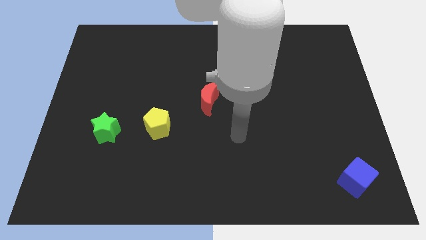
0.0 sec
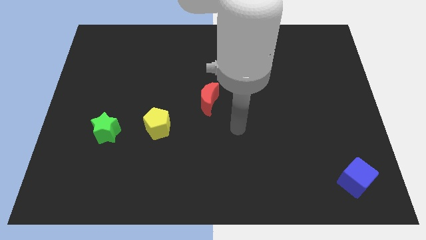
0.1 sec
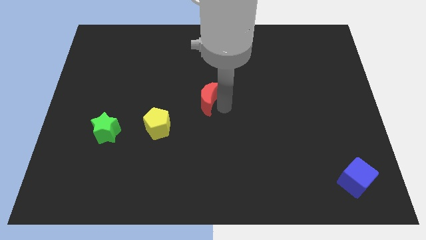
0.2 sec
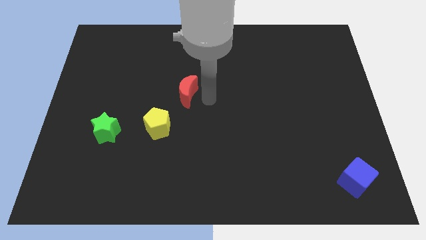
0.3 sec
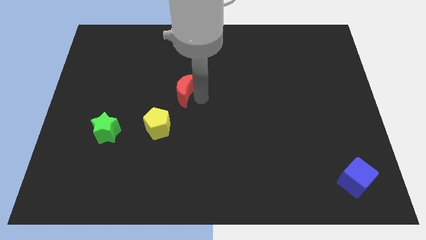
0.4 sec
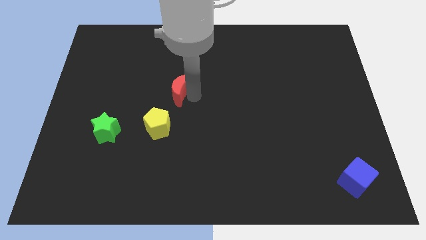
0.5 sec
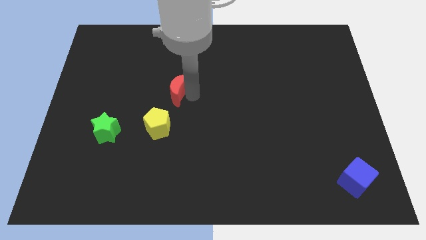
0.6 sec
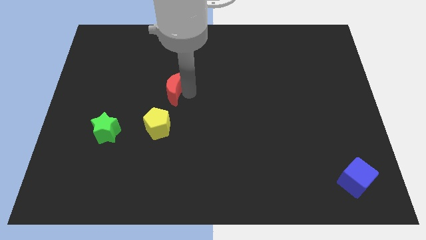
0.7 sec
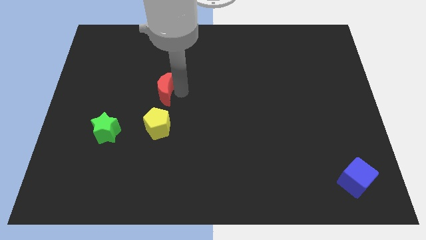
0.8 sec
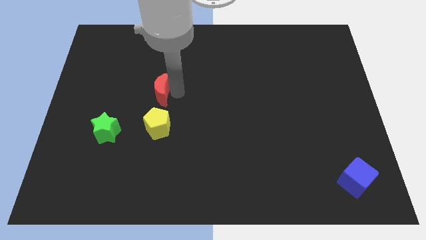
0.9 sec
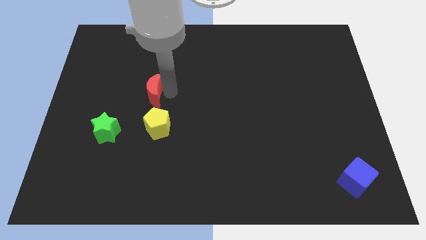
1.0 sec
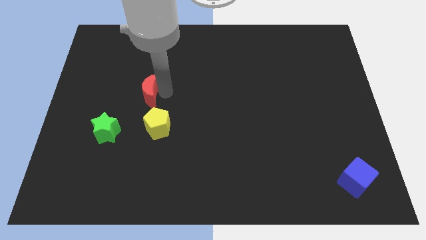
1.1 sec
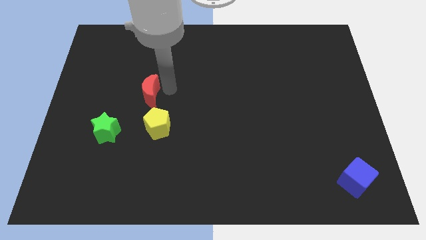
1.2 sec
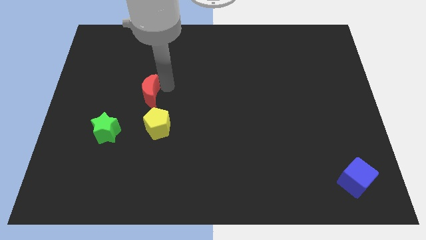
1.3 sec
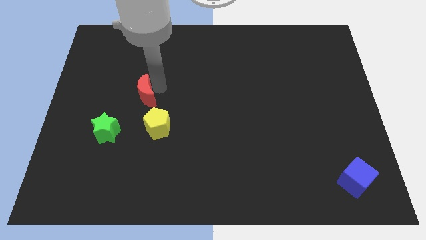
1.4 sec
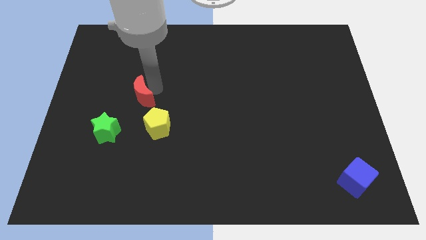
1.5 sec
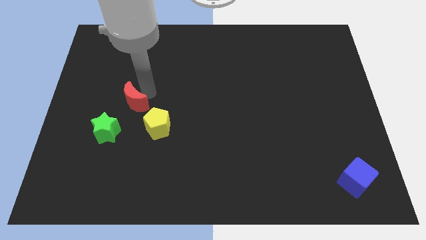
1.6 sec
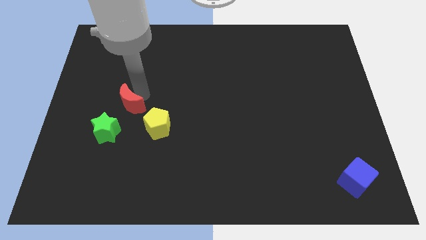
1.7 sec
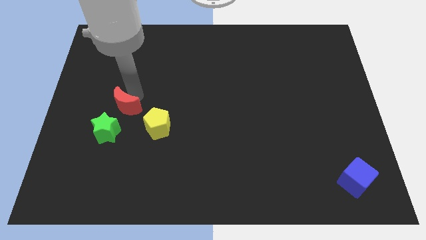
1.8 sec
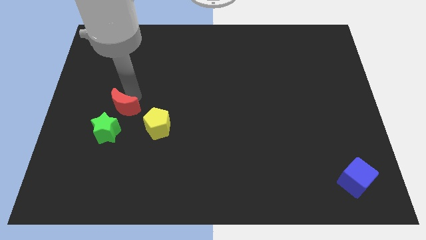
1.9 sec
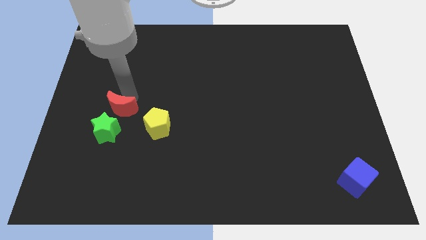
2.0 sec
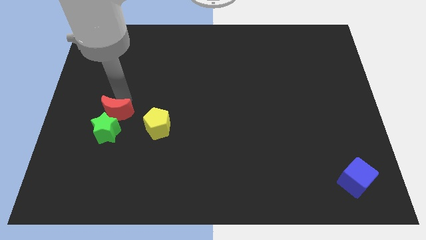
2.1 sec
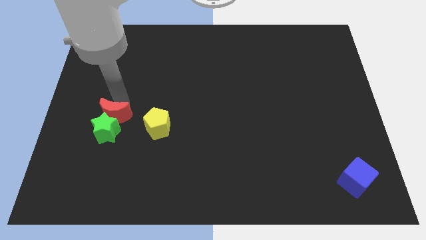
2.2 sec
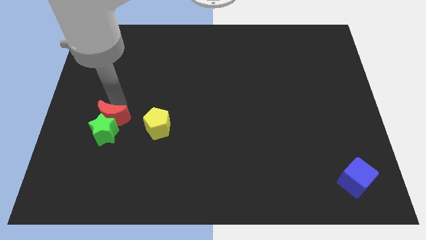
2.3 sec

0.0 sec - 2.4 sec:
move the moon next to the star

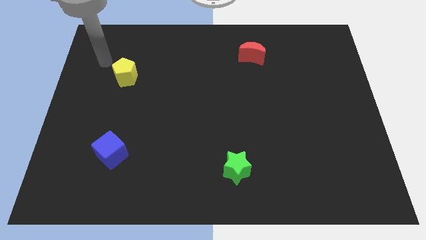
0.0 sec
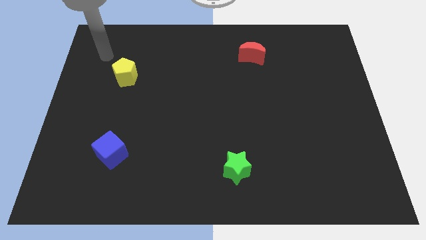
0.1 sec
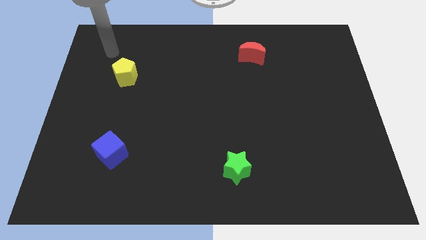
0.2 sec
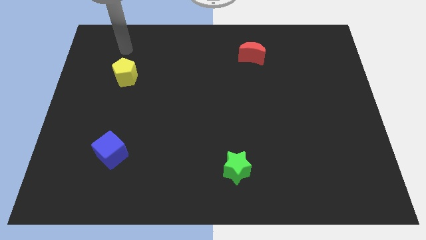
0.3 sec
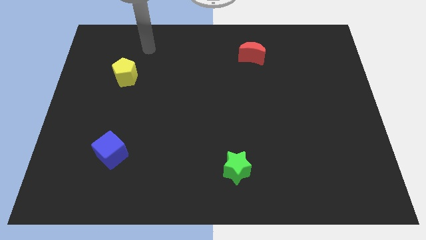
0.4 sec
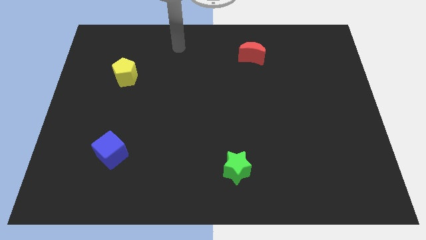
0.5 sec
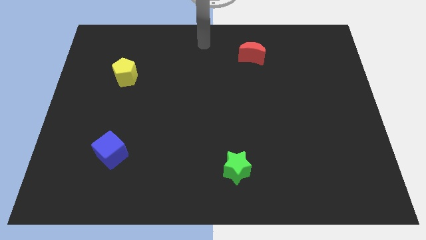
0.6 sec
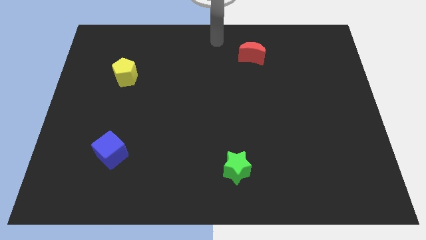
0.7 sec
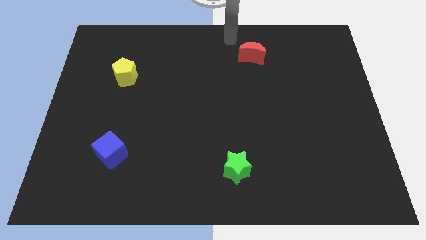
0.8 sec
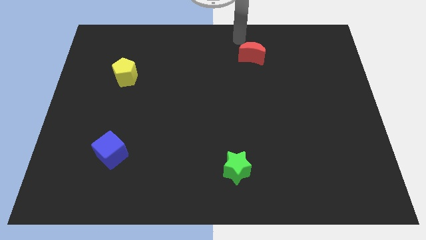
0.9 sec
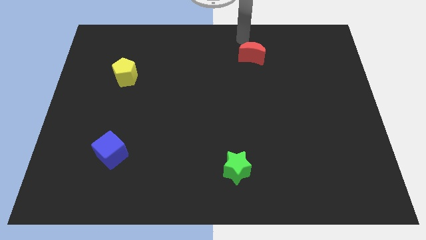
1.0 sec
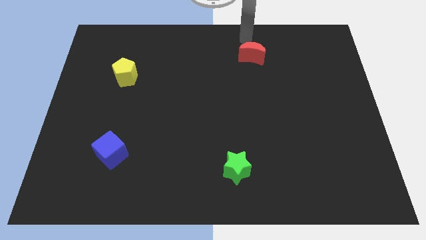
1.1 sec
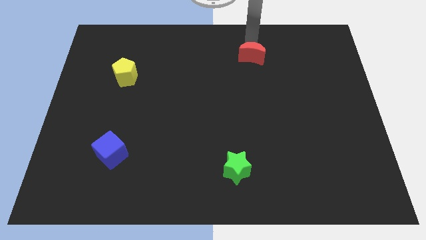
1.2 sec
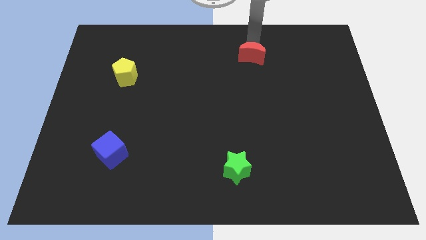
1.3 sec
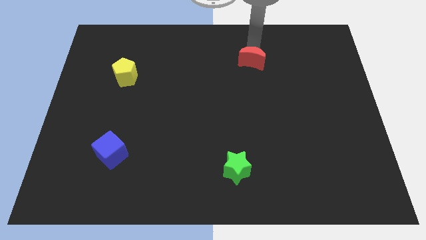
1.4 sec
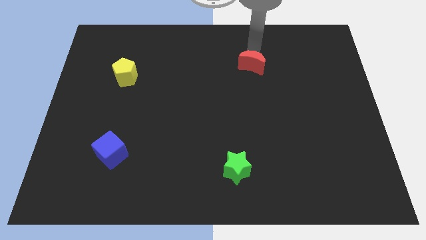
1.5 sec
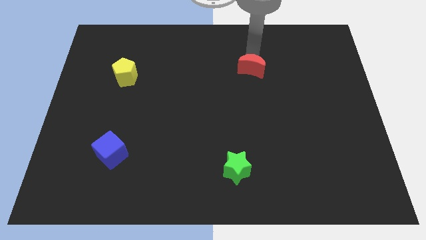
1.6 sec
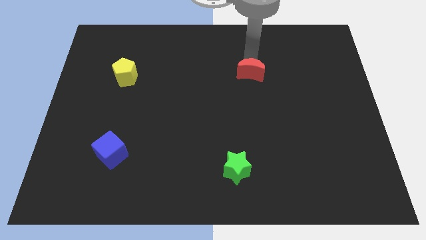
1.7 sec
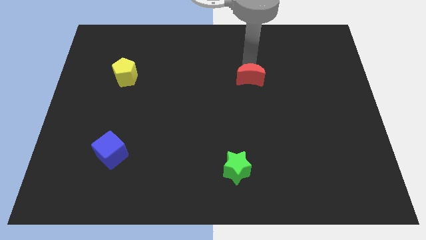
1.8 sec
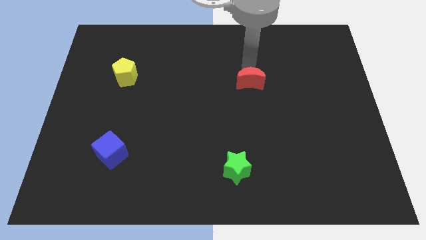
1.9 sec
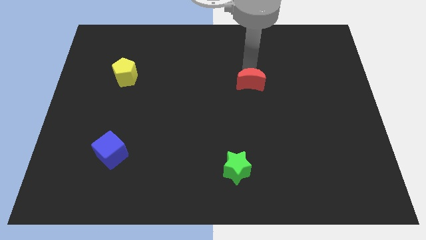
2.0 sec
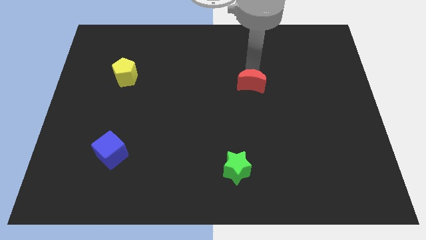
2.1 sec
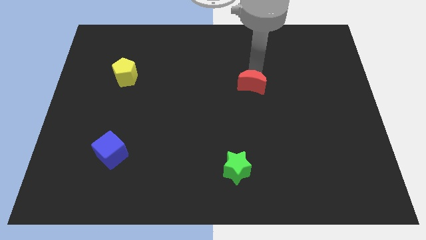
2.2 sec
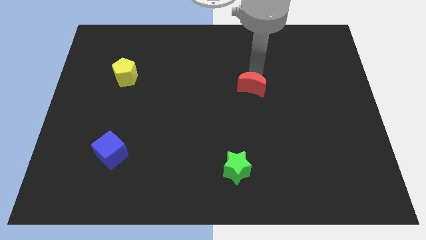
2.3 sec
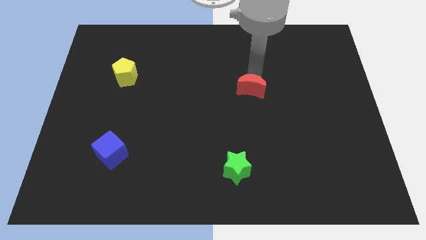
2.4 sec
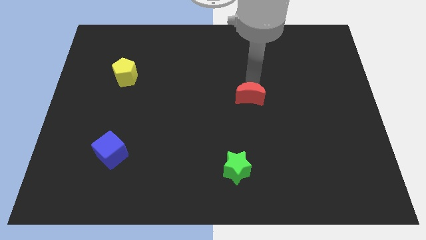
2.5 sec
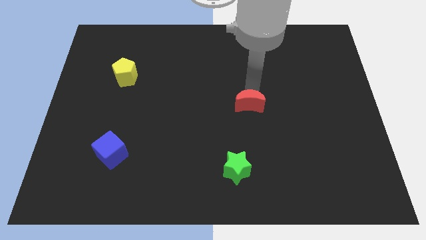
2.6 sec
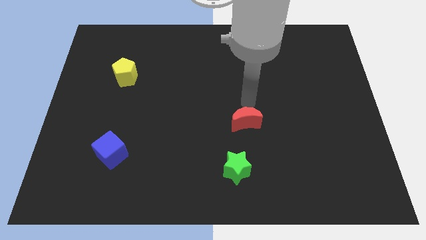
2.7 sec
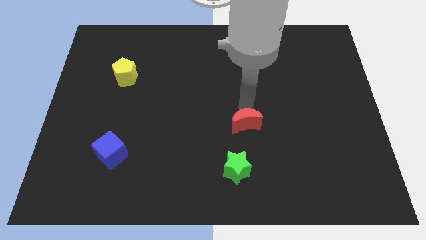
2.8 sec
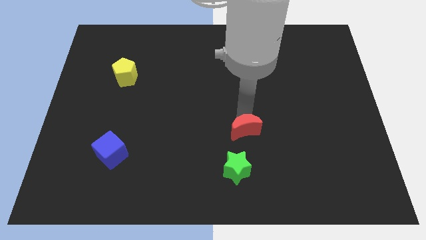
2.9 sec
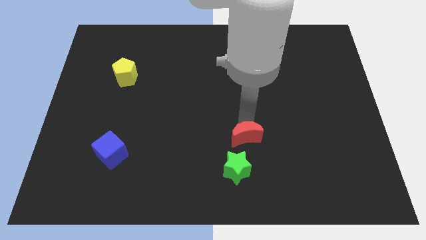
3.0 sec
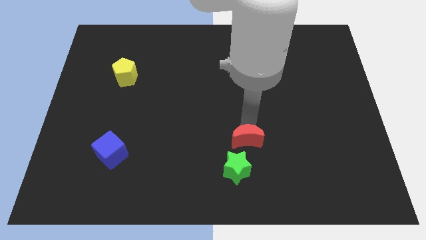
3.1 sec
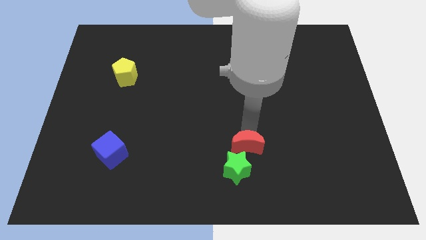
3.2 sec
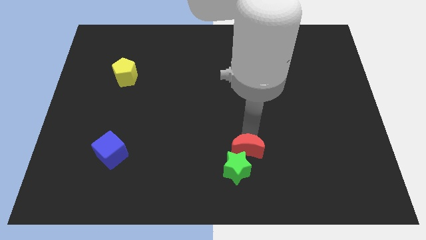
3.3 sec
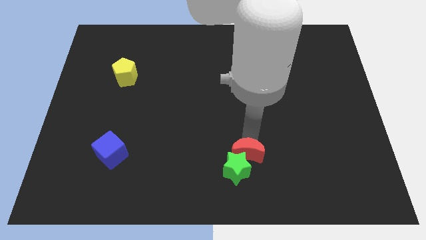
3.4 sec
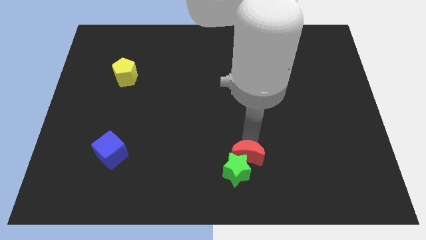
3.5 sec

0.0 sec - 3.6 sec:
slide the red block next to the star

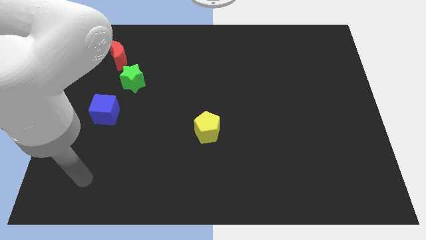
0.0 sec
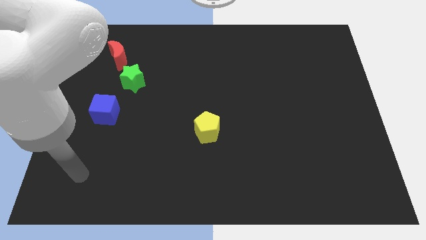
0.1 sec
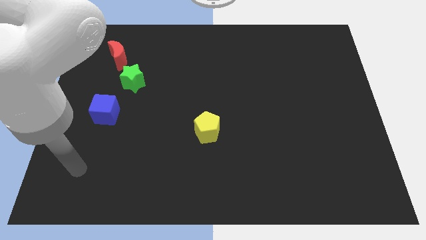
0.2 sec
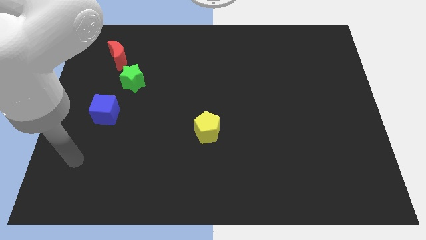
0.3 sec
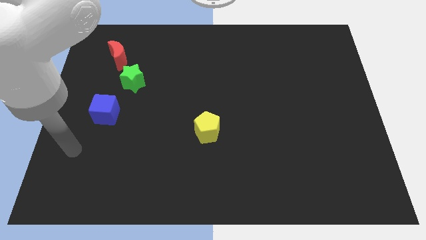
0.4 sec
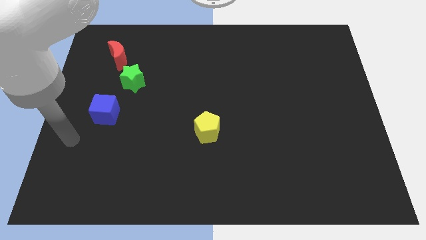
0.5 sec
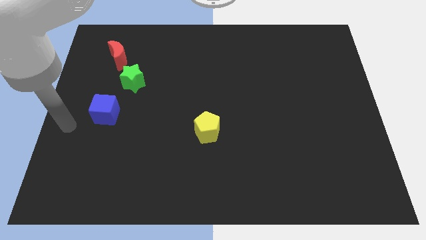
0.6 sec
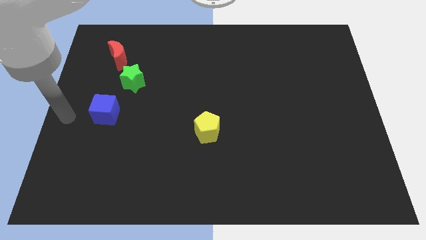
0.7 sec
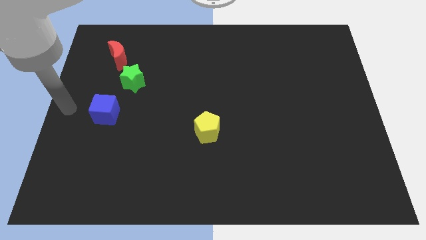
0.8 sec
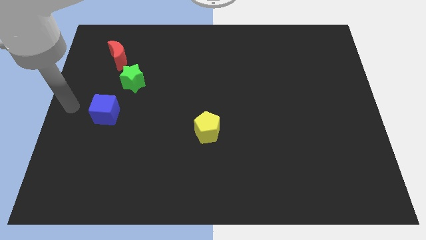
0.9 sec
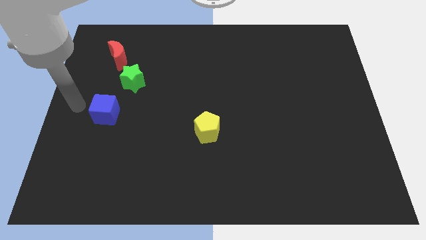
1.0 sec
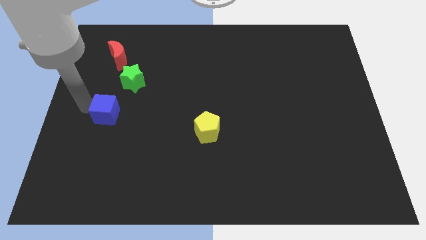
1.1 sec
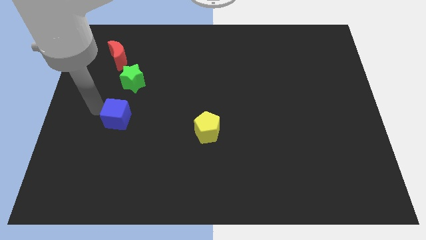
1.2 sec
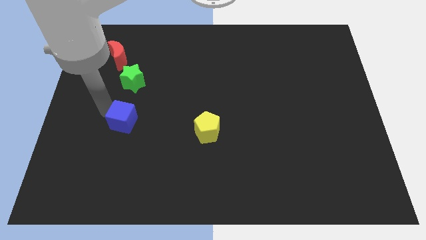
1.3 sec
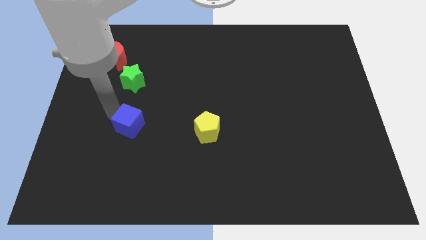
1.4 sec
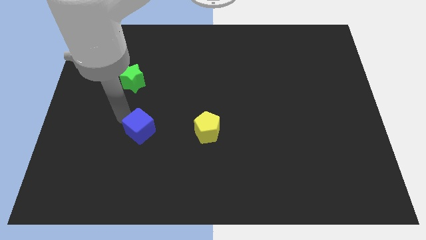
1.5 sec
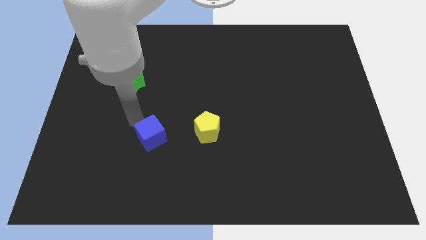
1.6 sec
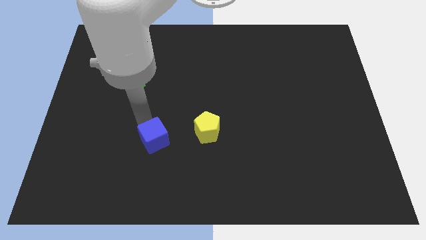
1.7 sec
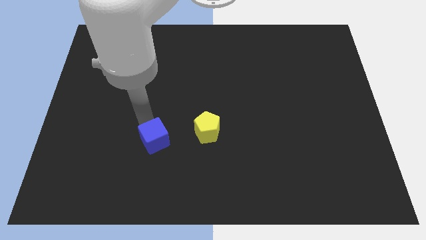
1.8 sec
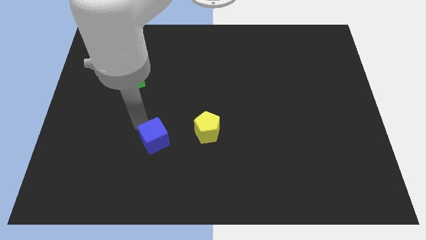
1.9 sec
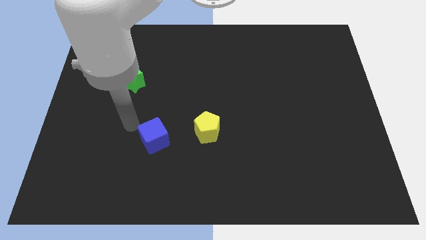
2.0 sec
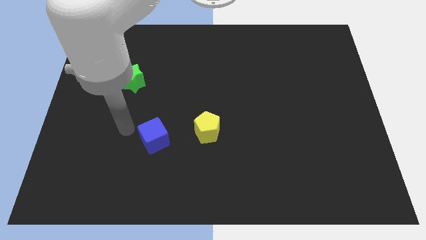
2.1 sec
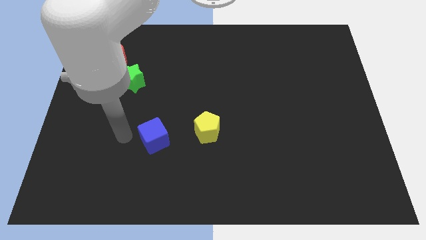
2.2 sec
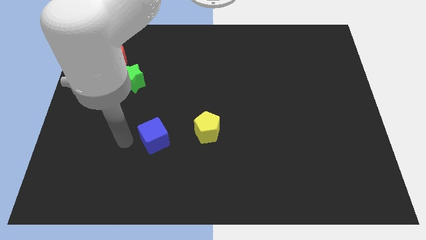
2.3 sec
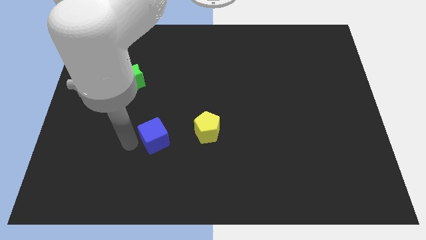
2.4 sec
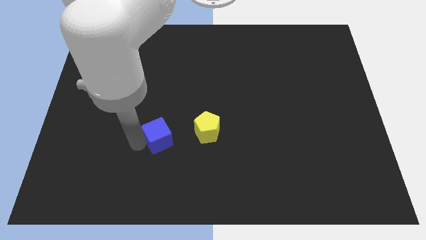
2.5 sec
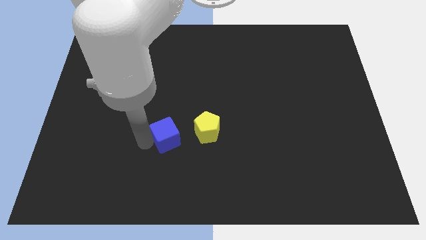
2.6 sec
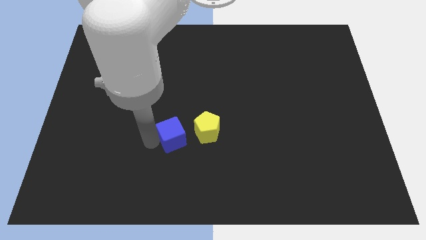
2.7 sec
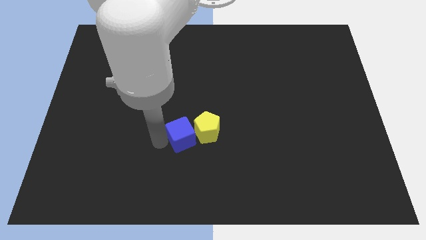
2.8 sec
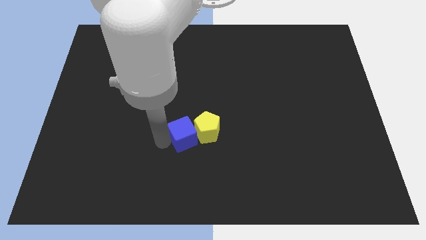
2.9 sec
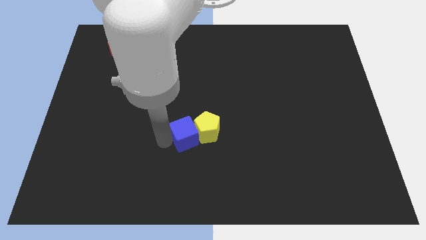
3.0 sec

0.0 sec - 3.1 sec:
move the cube close to the yellow block
